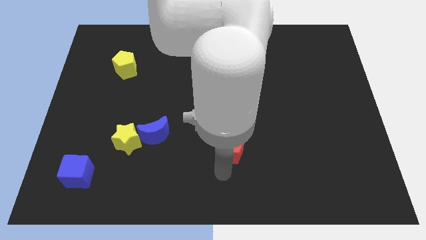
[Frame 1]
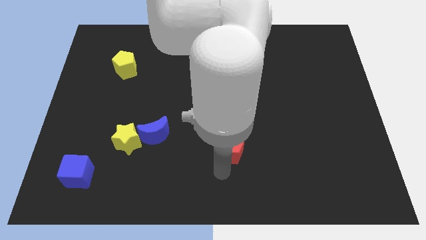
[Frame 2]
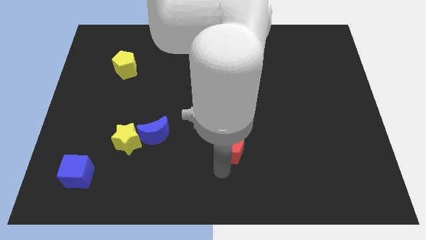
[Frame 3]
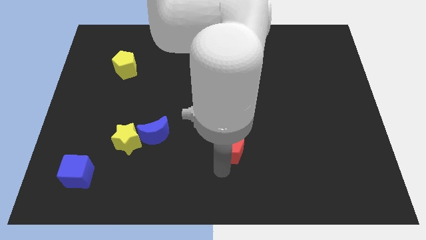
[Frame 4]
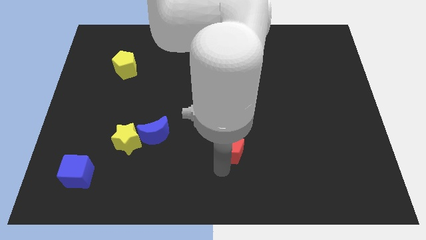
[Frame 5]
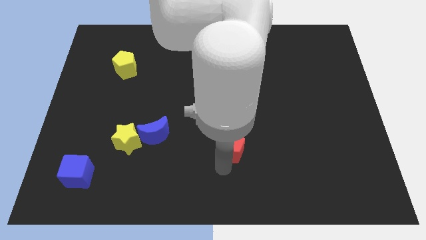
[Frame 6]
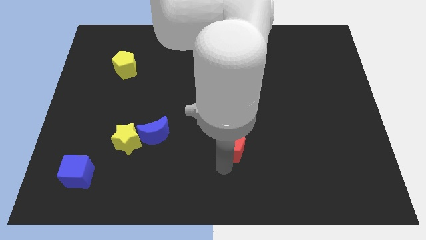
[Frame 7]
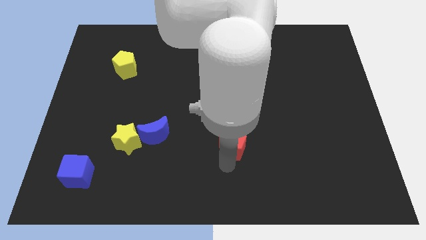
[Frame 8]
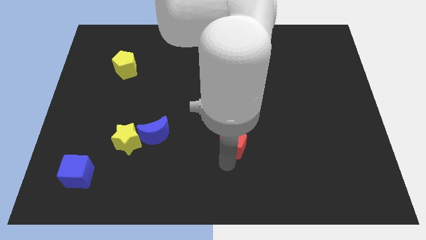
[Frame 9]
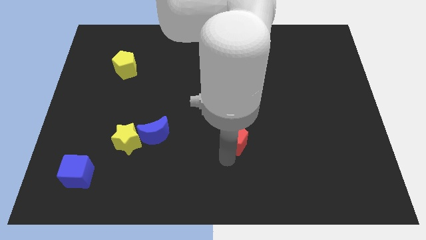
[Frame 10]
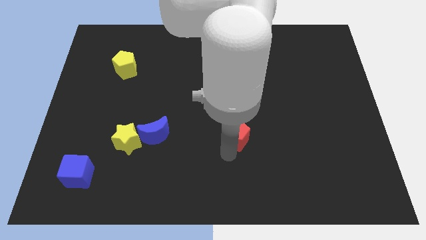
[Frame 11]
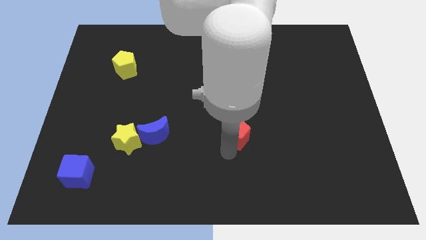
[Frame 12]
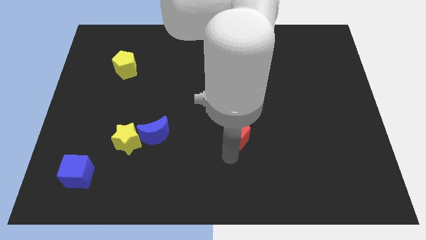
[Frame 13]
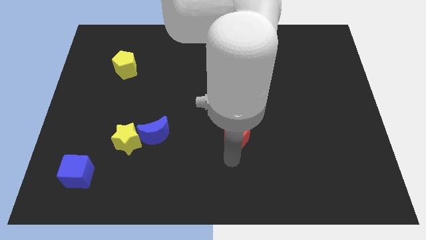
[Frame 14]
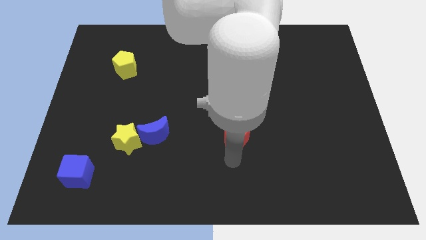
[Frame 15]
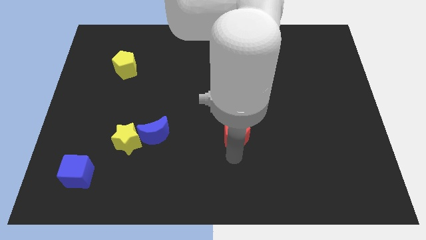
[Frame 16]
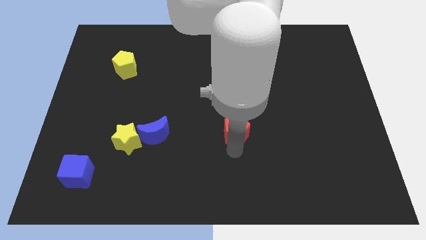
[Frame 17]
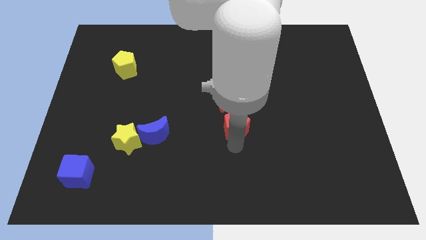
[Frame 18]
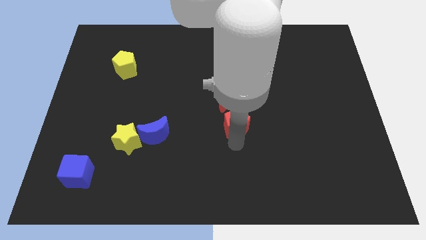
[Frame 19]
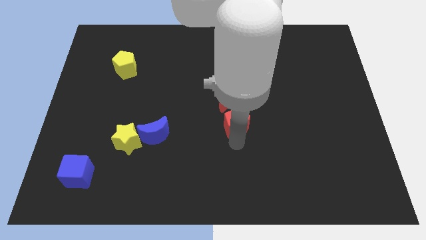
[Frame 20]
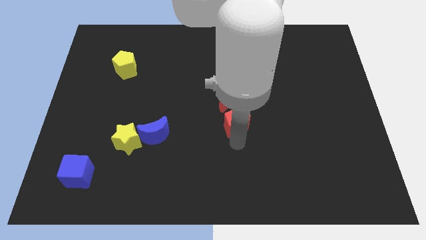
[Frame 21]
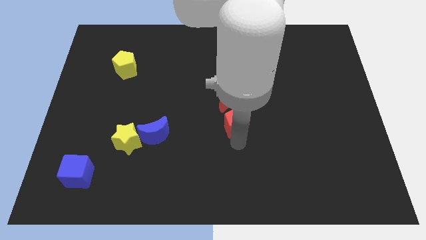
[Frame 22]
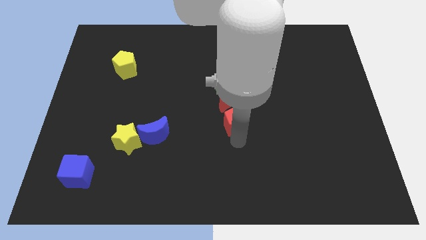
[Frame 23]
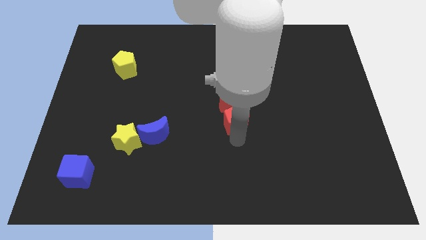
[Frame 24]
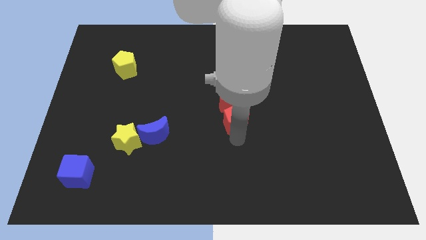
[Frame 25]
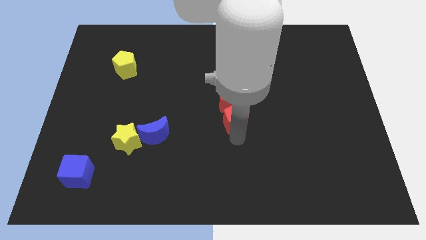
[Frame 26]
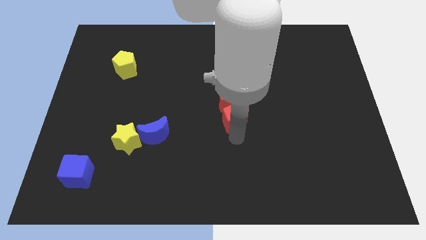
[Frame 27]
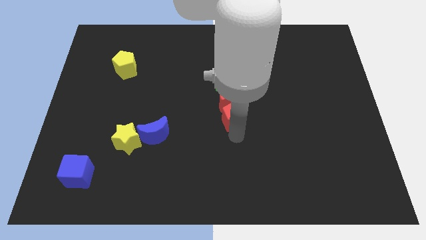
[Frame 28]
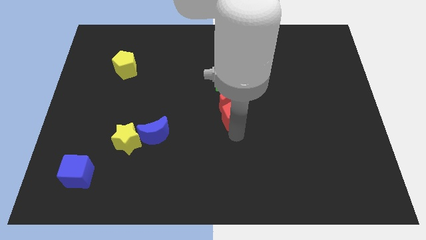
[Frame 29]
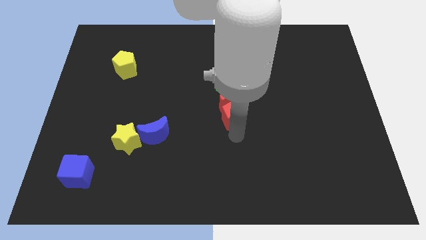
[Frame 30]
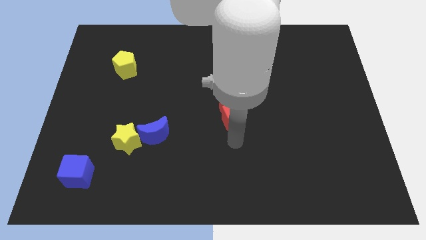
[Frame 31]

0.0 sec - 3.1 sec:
place the red pentagon below the red crescent

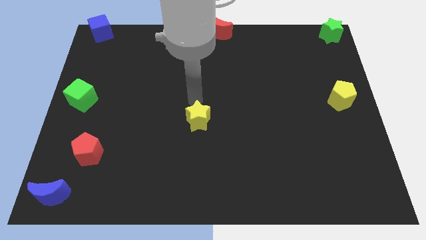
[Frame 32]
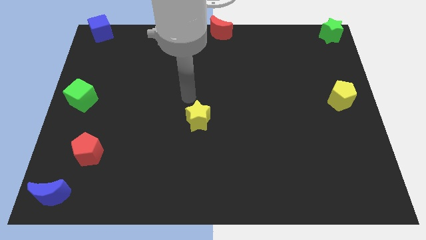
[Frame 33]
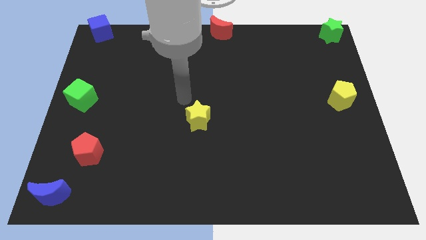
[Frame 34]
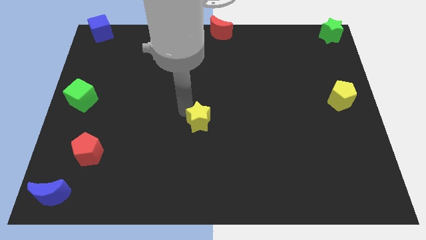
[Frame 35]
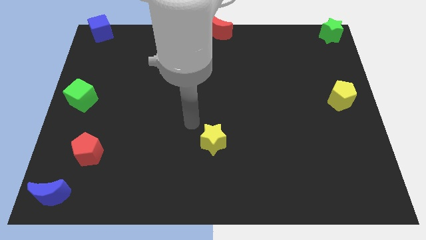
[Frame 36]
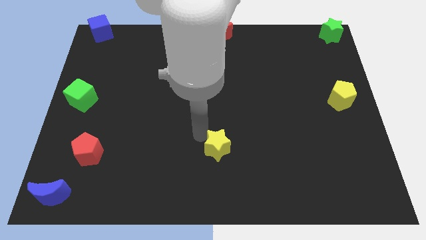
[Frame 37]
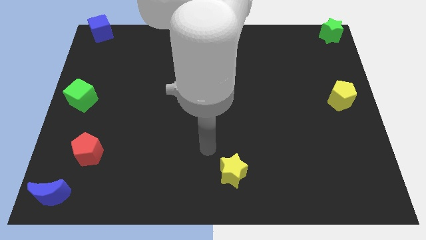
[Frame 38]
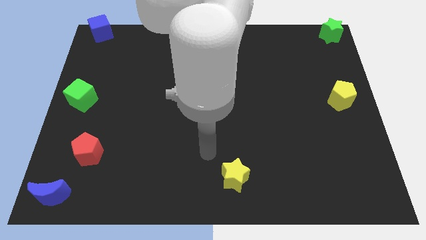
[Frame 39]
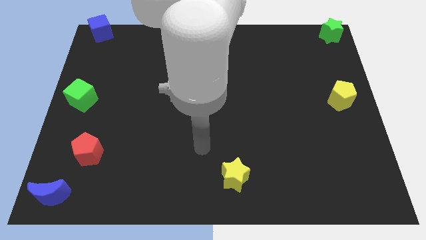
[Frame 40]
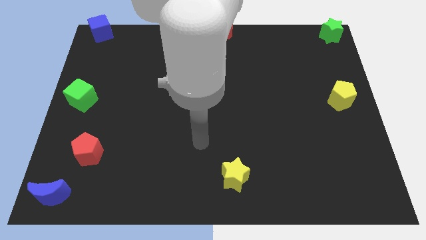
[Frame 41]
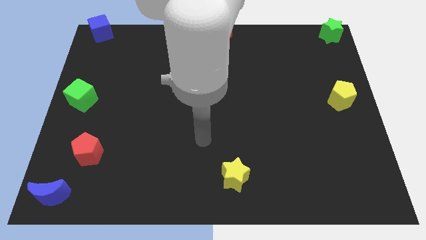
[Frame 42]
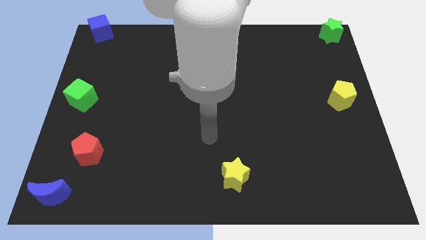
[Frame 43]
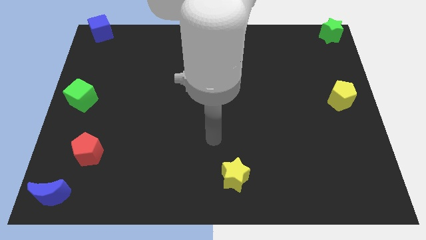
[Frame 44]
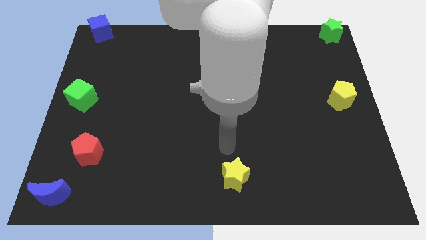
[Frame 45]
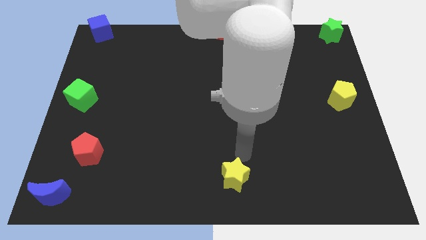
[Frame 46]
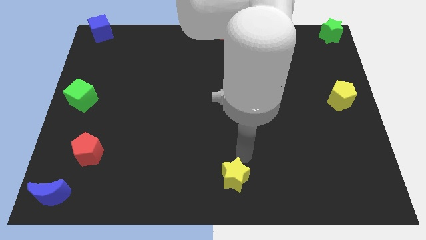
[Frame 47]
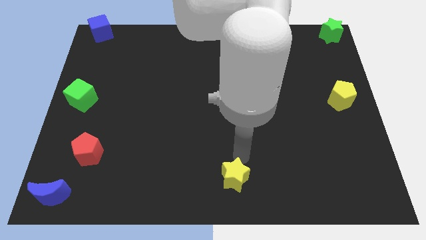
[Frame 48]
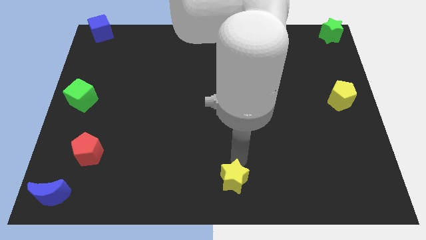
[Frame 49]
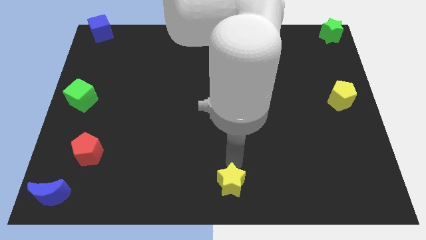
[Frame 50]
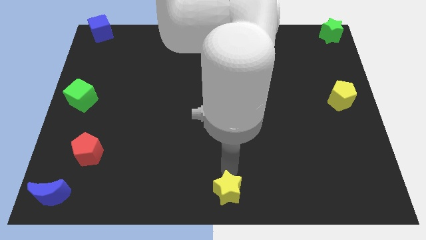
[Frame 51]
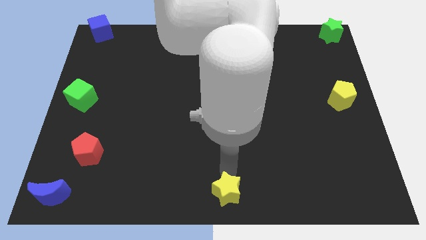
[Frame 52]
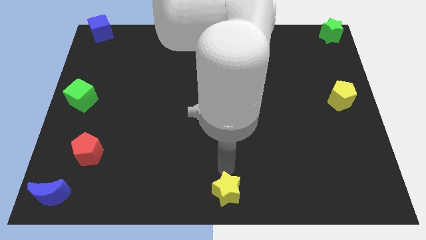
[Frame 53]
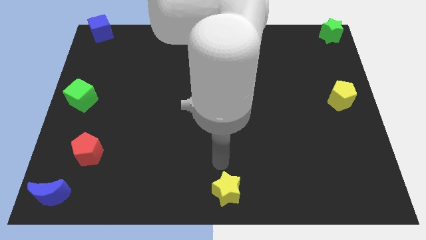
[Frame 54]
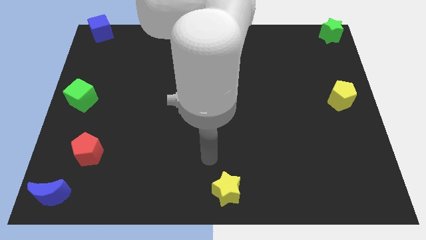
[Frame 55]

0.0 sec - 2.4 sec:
push the yellow star to the bottom center

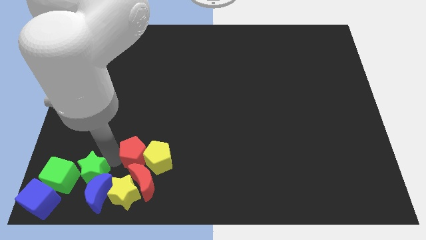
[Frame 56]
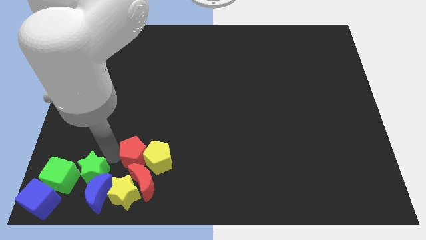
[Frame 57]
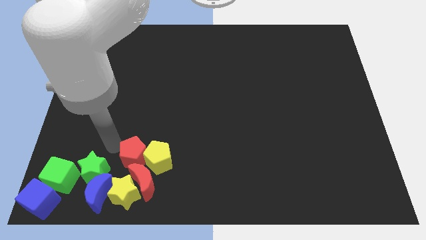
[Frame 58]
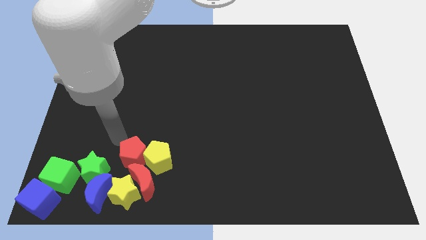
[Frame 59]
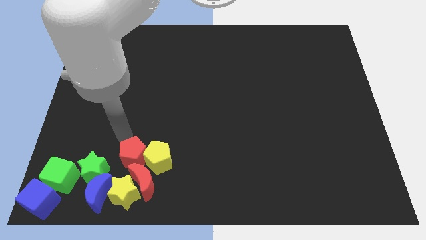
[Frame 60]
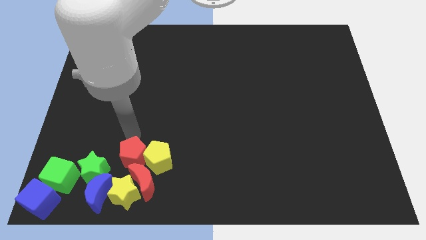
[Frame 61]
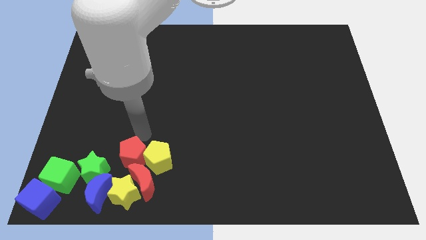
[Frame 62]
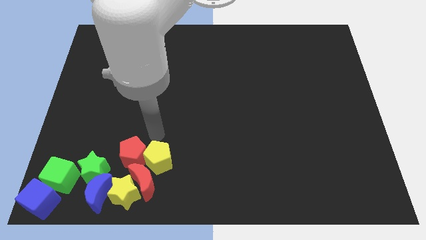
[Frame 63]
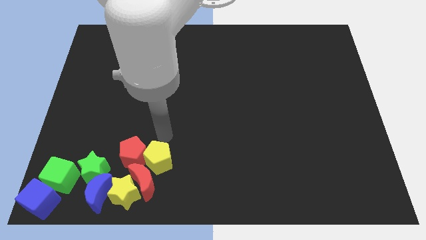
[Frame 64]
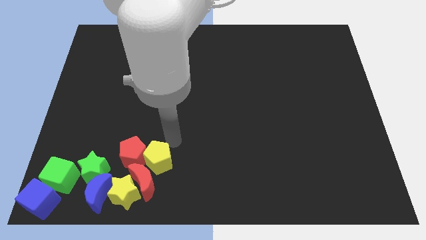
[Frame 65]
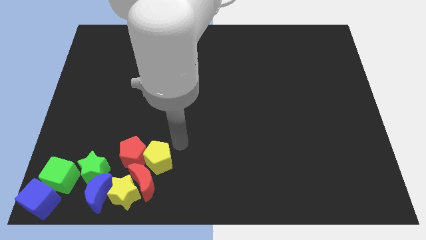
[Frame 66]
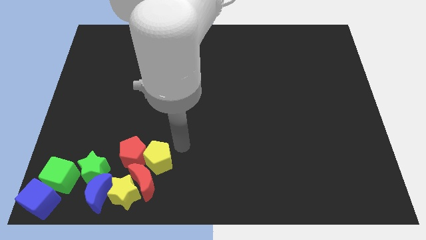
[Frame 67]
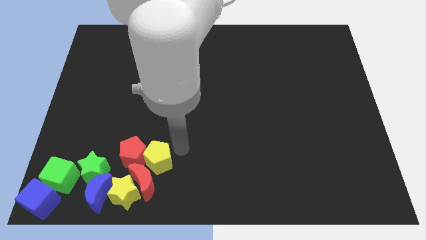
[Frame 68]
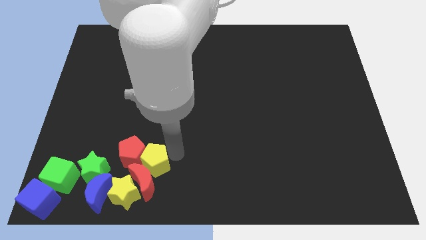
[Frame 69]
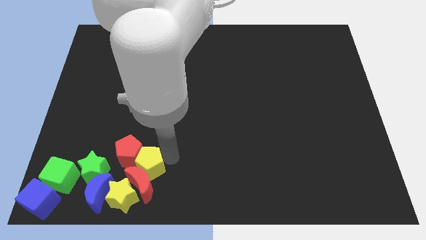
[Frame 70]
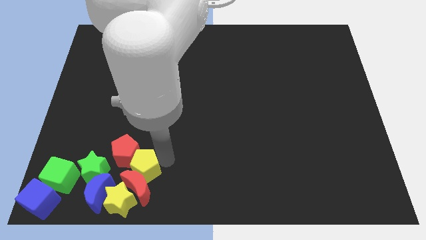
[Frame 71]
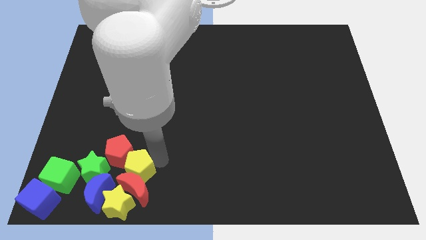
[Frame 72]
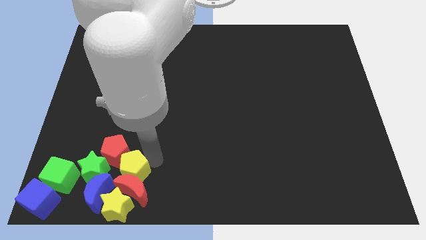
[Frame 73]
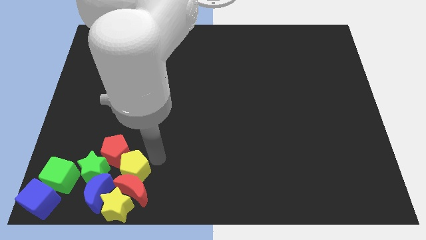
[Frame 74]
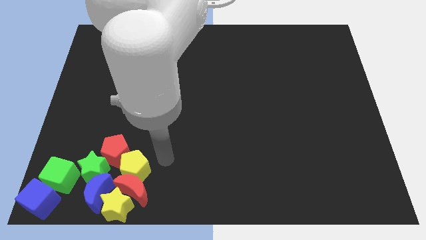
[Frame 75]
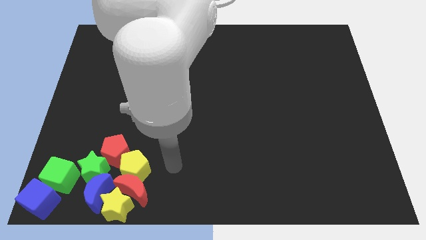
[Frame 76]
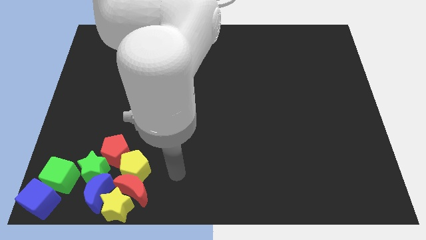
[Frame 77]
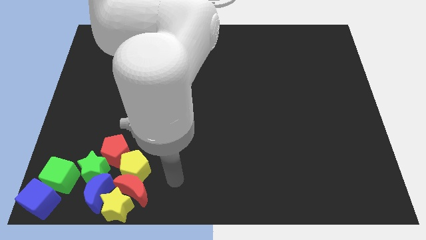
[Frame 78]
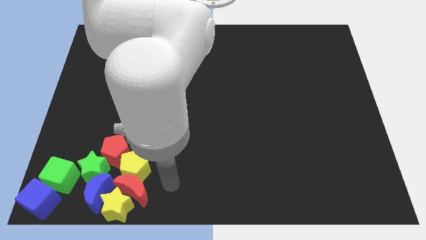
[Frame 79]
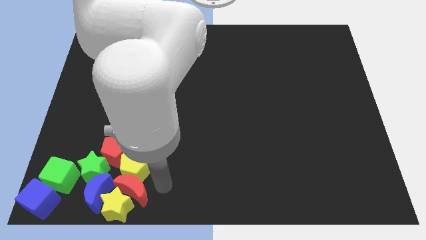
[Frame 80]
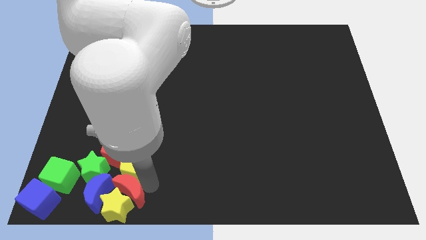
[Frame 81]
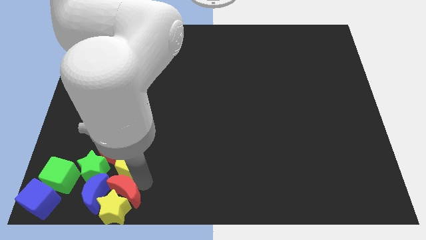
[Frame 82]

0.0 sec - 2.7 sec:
push the red and yellow blocks towards the left side of the board

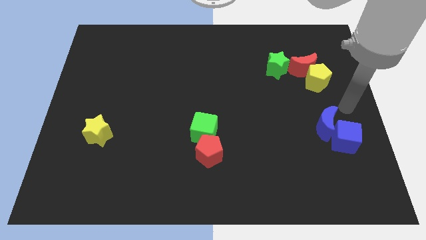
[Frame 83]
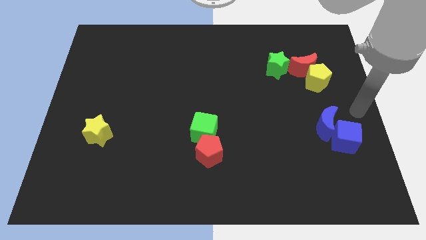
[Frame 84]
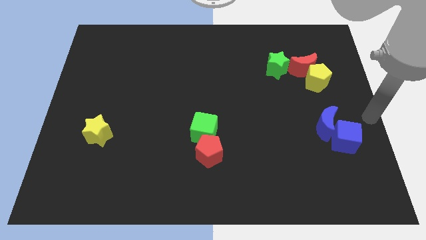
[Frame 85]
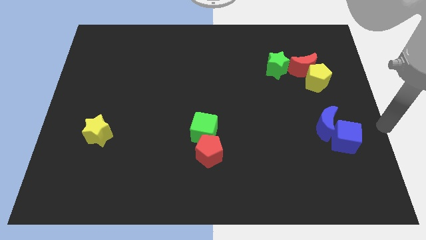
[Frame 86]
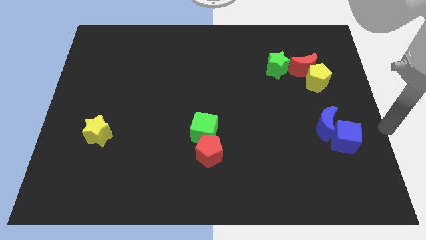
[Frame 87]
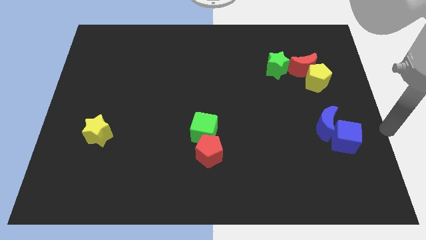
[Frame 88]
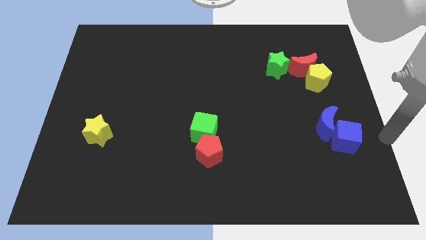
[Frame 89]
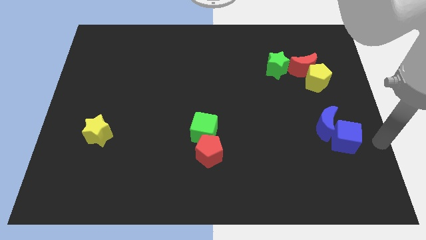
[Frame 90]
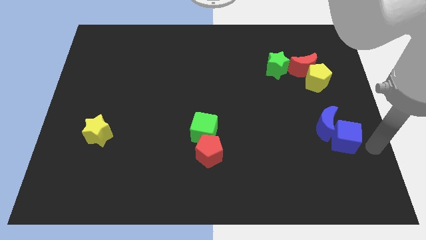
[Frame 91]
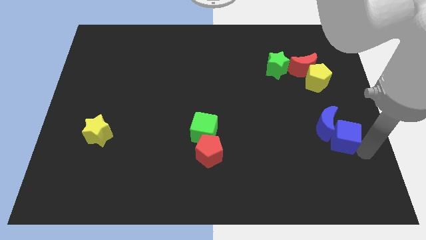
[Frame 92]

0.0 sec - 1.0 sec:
move your arm towards the blue cube
